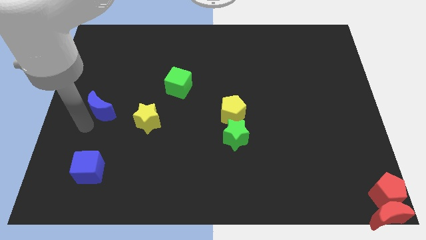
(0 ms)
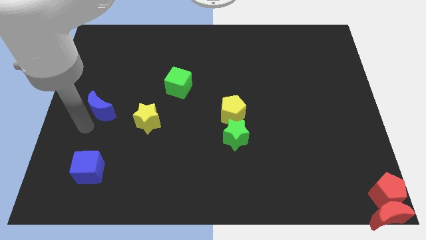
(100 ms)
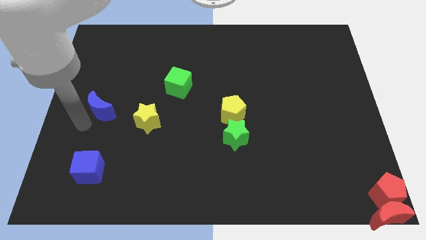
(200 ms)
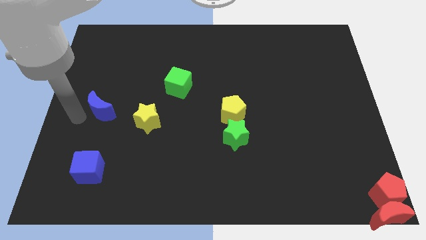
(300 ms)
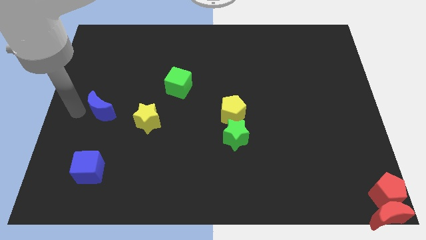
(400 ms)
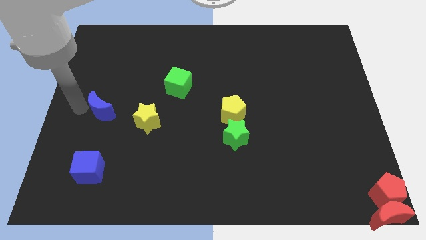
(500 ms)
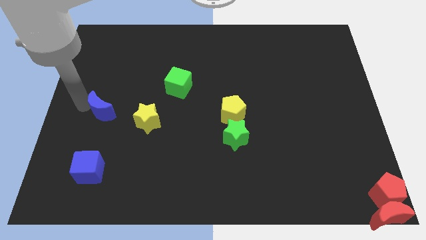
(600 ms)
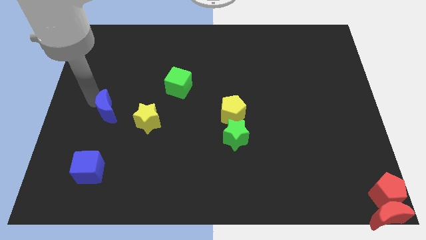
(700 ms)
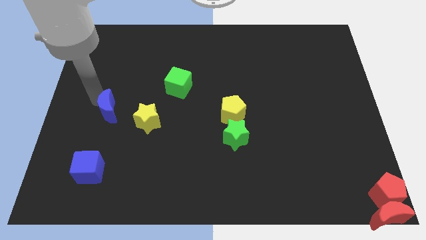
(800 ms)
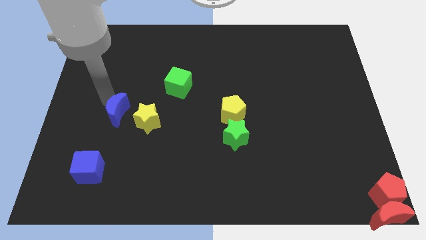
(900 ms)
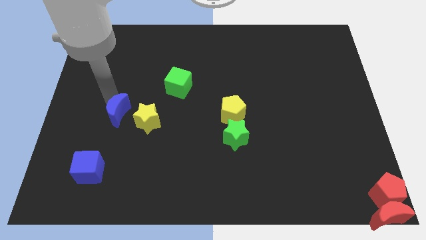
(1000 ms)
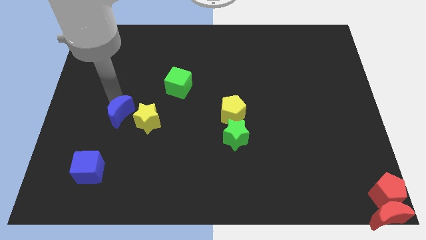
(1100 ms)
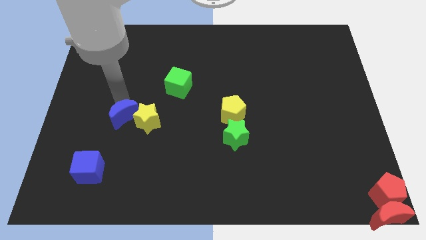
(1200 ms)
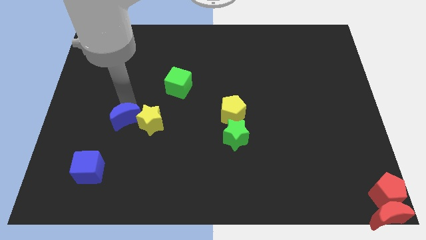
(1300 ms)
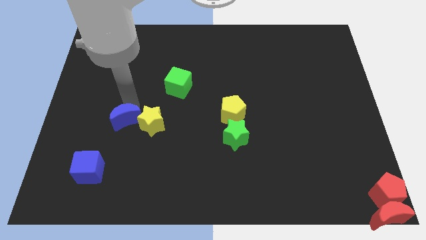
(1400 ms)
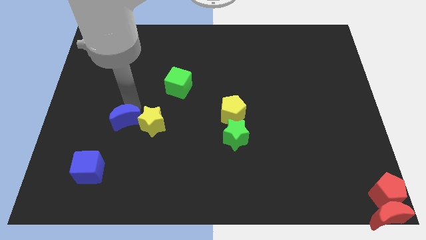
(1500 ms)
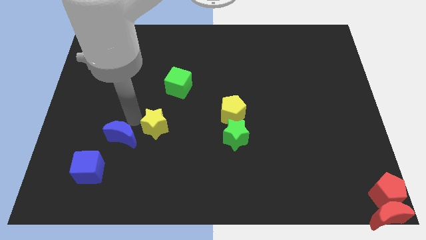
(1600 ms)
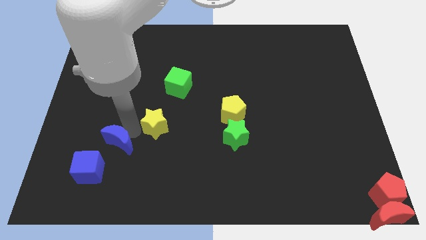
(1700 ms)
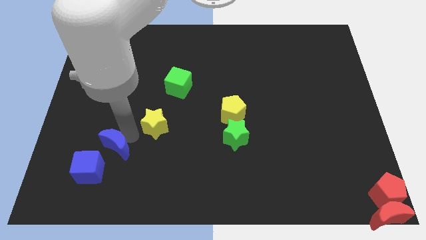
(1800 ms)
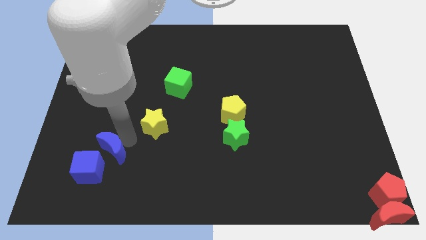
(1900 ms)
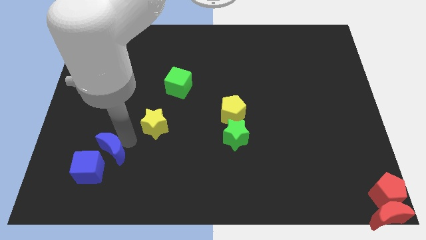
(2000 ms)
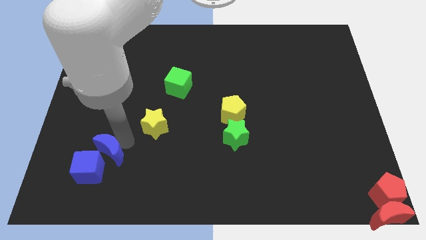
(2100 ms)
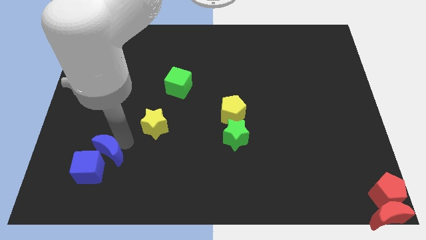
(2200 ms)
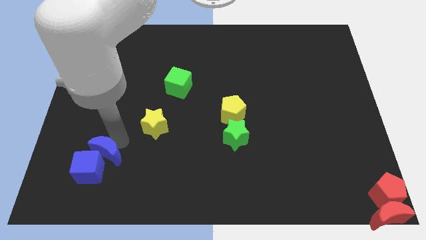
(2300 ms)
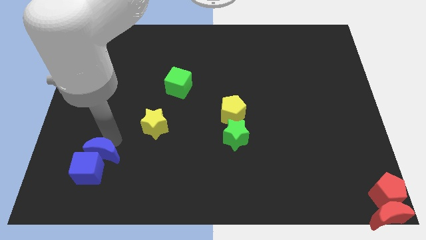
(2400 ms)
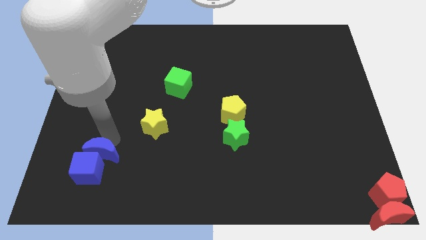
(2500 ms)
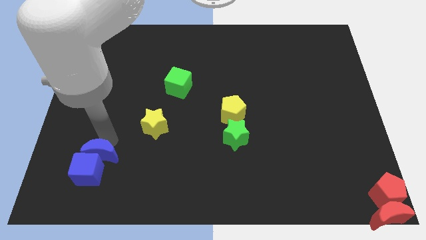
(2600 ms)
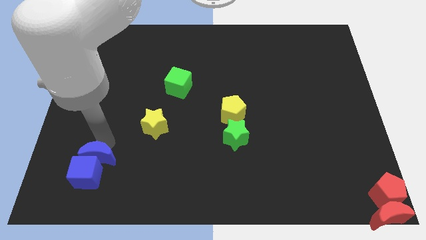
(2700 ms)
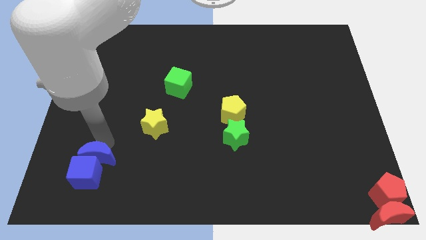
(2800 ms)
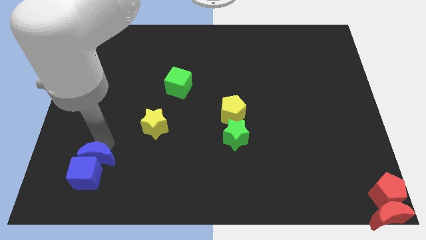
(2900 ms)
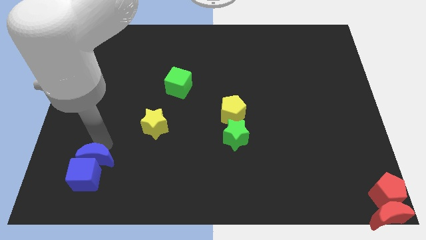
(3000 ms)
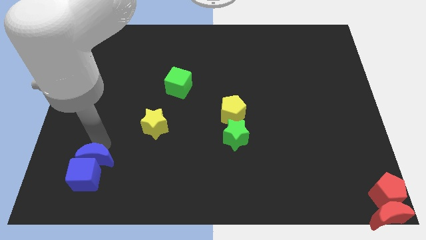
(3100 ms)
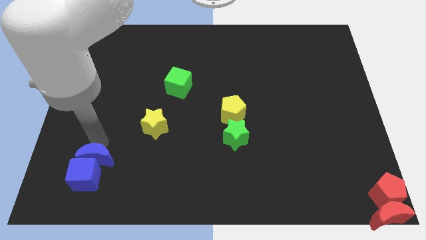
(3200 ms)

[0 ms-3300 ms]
move the blue moon to the top side of the blue cube

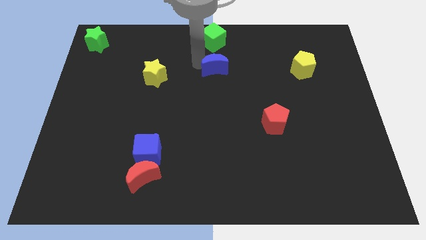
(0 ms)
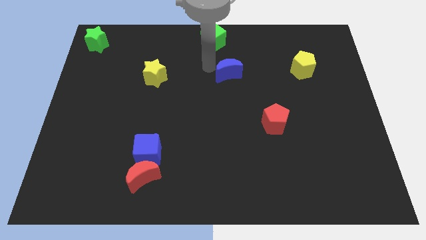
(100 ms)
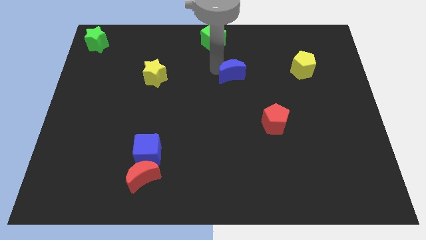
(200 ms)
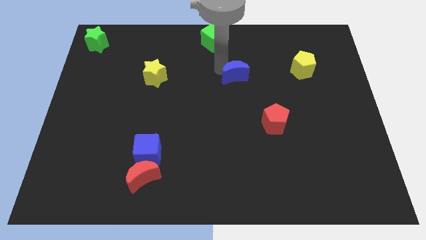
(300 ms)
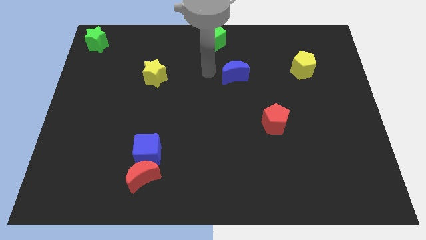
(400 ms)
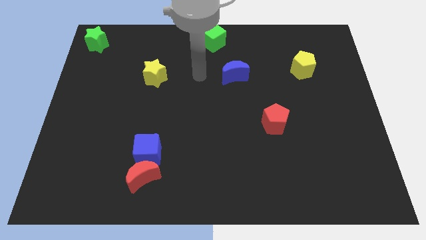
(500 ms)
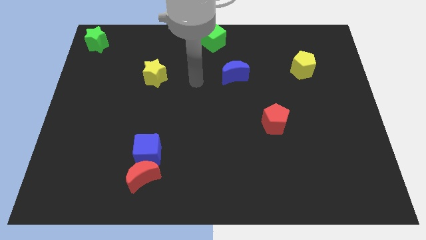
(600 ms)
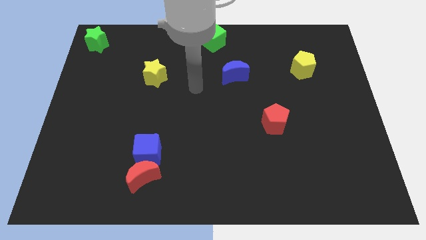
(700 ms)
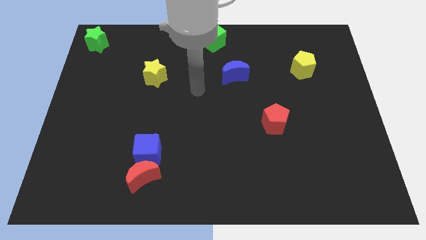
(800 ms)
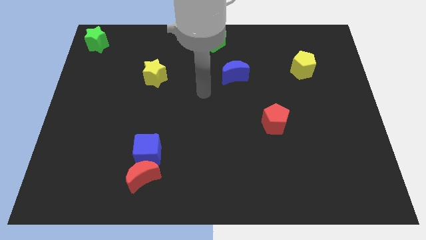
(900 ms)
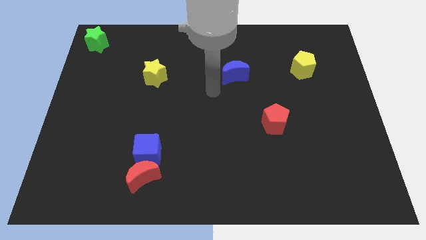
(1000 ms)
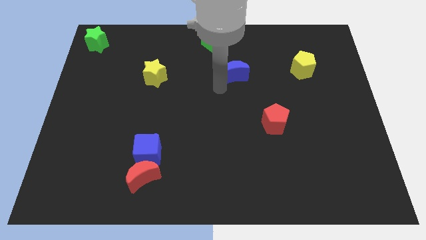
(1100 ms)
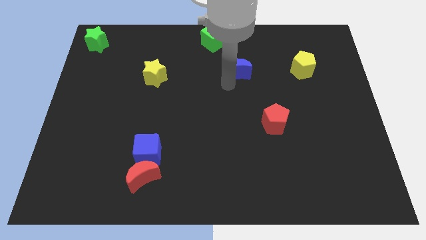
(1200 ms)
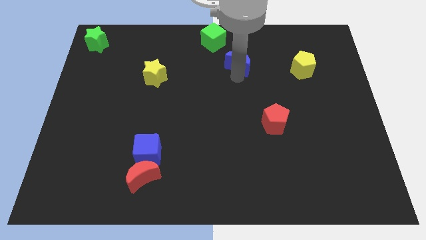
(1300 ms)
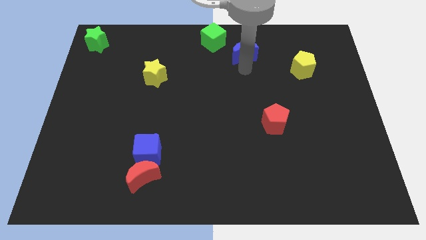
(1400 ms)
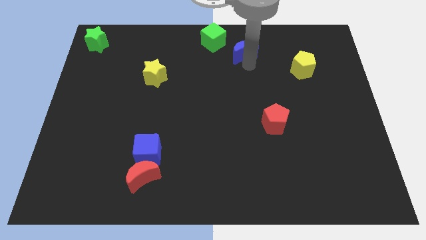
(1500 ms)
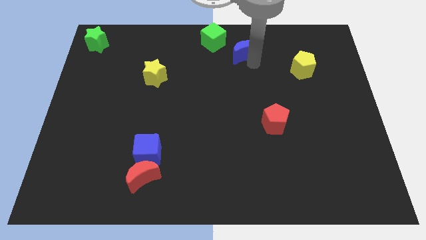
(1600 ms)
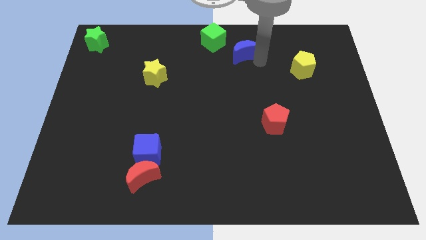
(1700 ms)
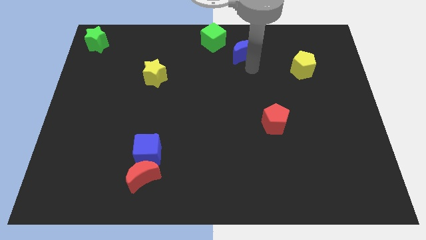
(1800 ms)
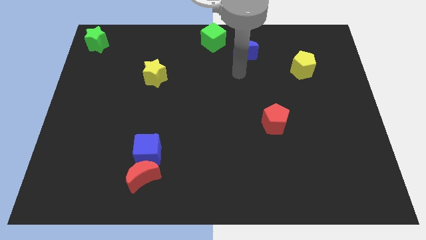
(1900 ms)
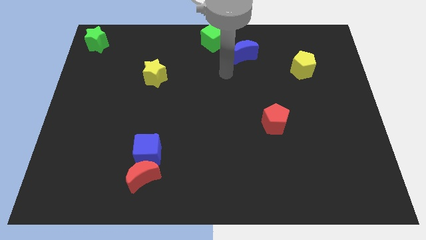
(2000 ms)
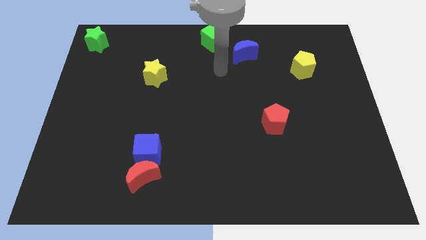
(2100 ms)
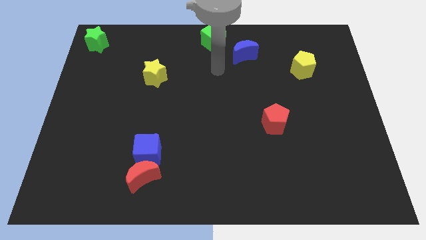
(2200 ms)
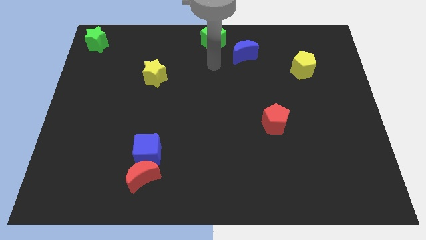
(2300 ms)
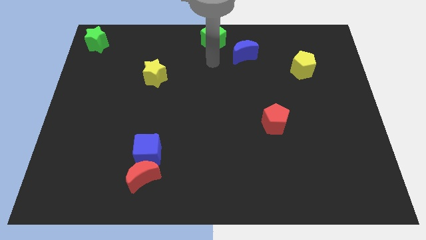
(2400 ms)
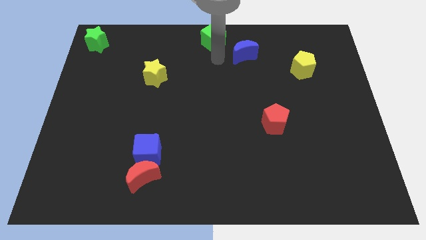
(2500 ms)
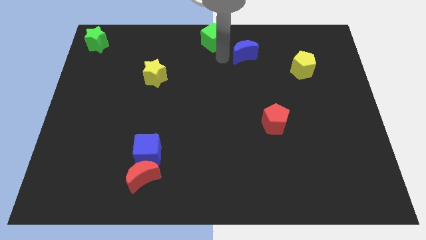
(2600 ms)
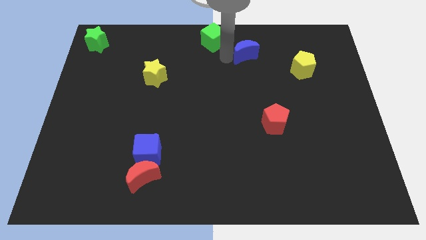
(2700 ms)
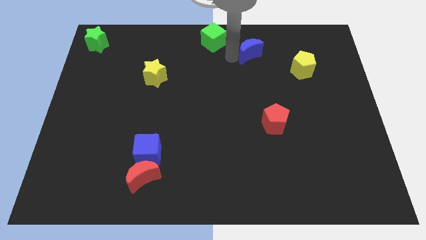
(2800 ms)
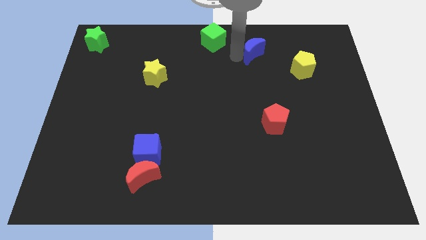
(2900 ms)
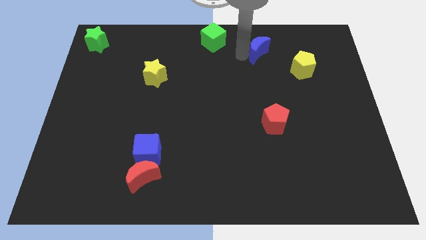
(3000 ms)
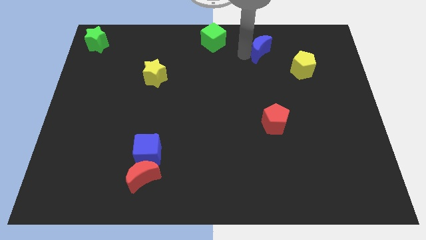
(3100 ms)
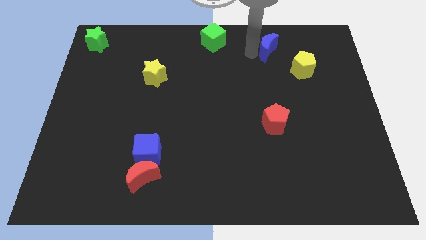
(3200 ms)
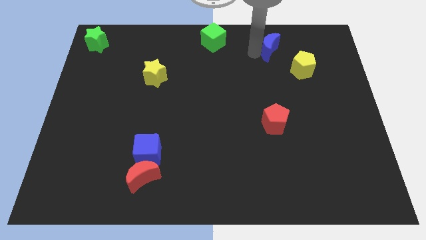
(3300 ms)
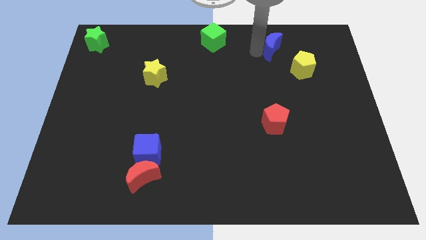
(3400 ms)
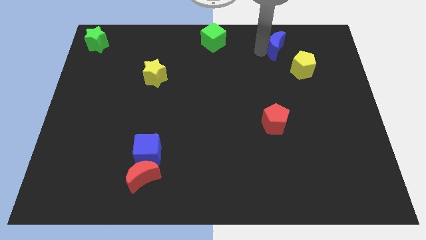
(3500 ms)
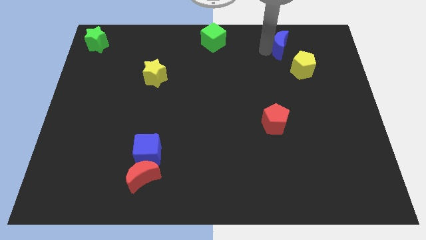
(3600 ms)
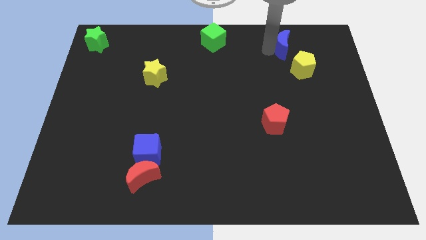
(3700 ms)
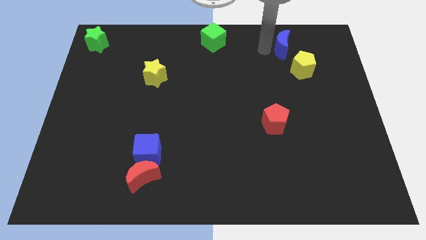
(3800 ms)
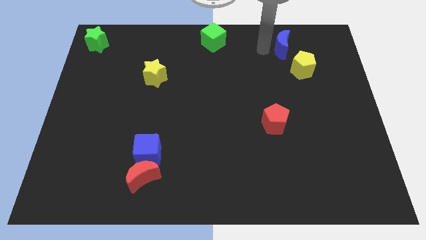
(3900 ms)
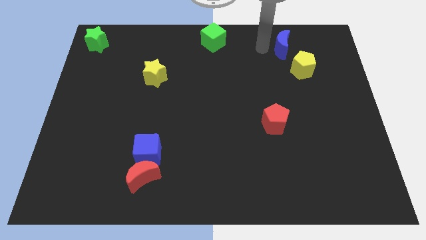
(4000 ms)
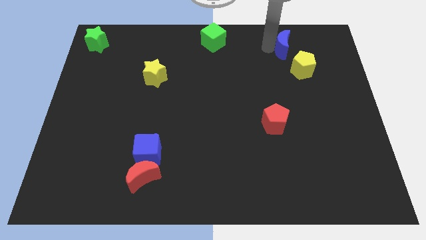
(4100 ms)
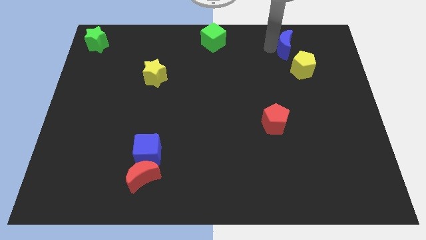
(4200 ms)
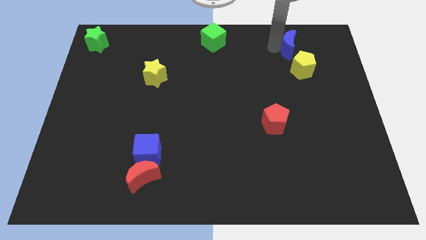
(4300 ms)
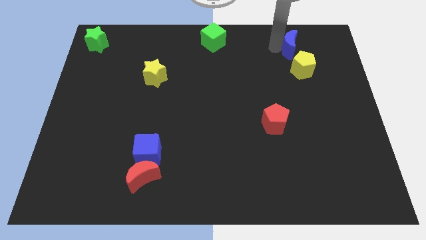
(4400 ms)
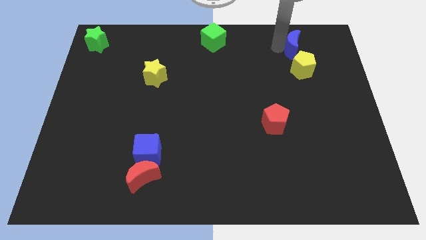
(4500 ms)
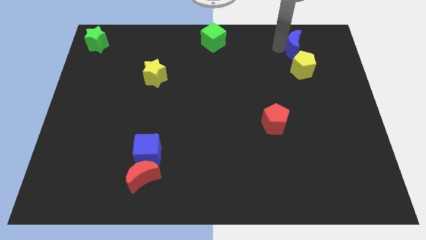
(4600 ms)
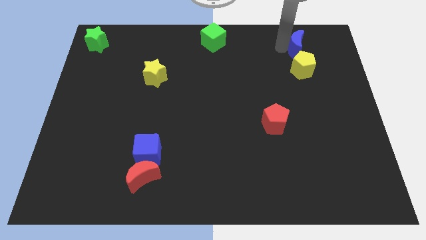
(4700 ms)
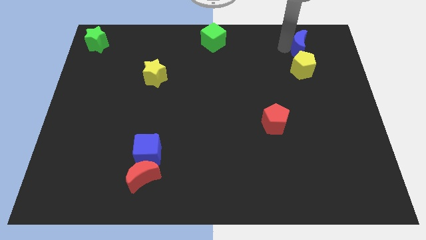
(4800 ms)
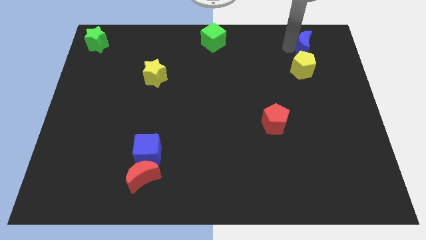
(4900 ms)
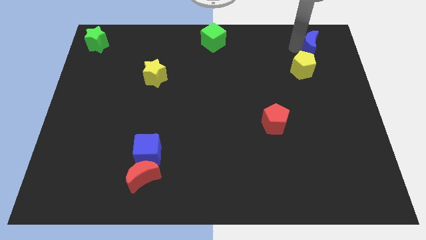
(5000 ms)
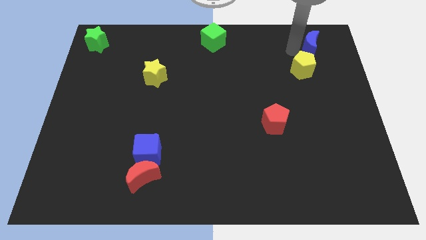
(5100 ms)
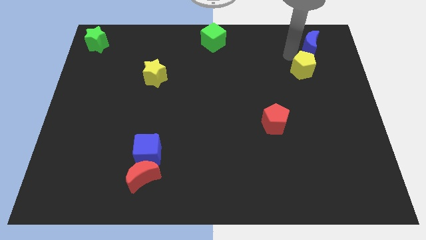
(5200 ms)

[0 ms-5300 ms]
place blue moon above the yellow pentagon

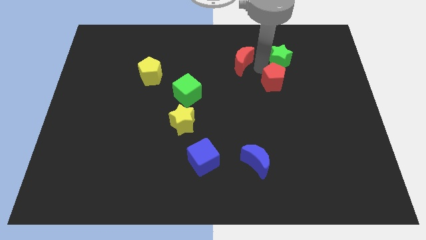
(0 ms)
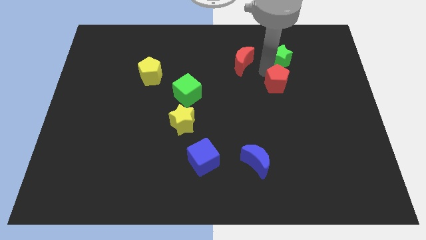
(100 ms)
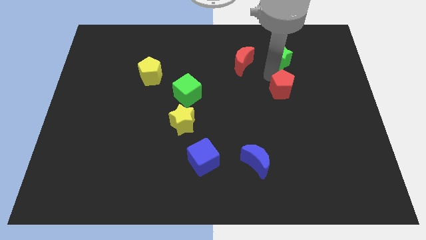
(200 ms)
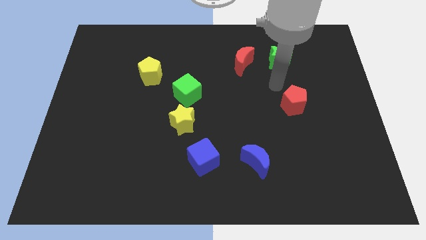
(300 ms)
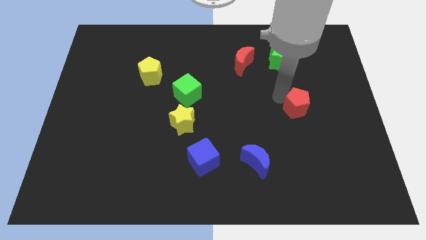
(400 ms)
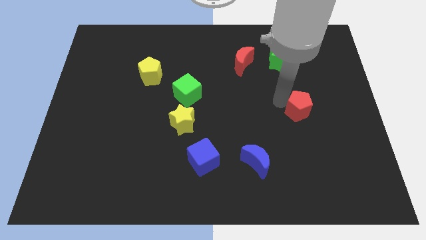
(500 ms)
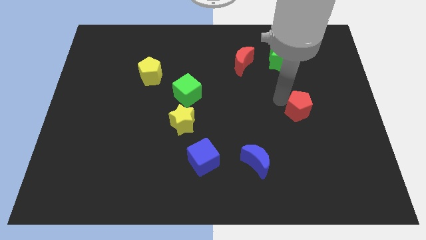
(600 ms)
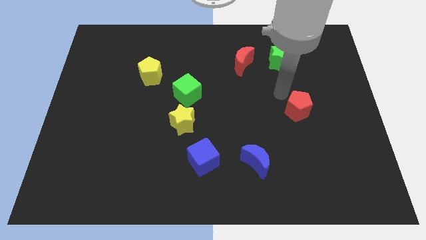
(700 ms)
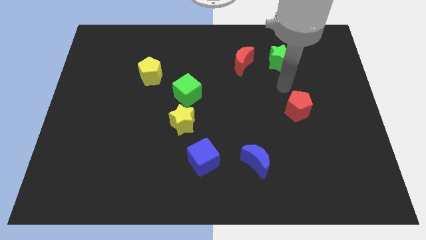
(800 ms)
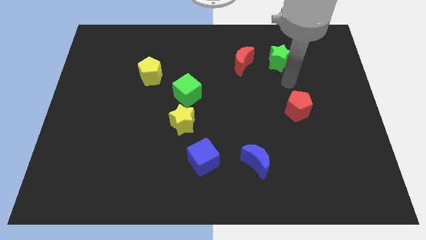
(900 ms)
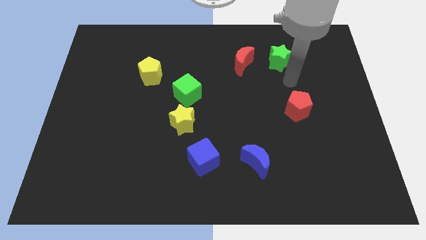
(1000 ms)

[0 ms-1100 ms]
place the red pentagon right to the yellow star
